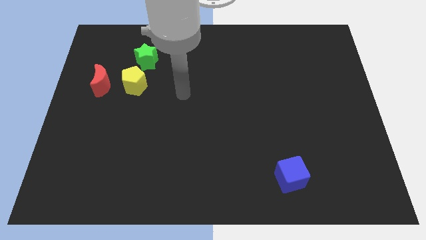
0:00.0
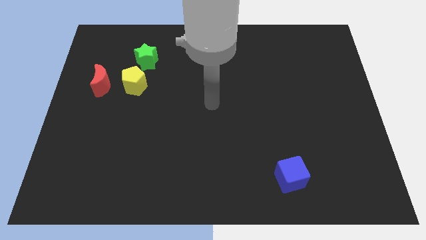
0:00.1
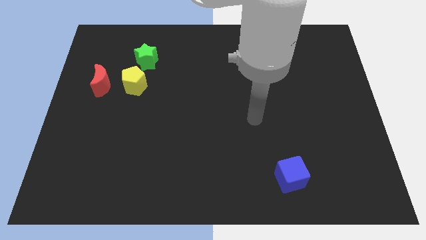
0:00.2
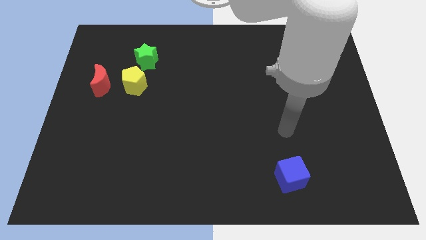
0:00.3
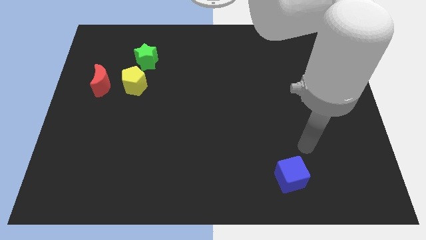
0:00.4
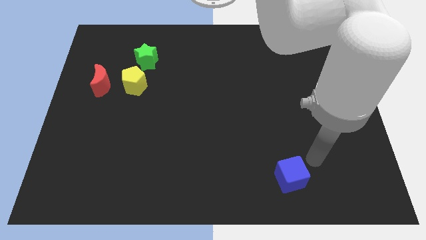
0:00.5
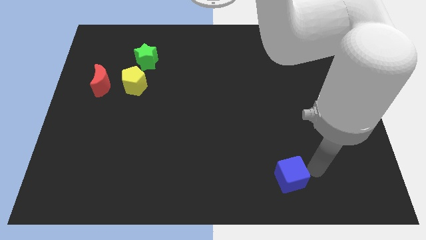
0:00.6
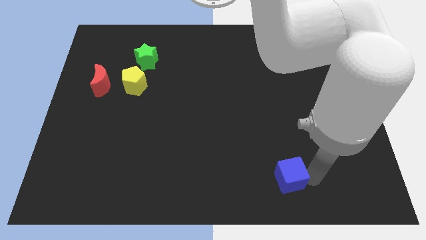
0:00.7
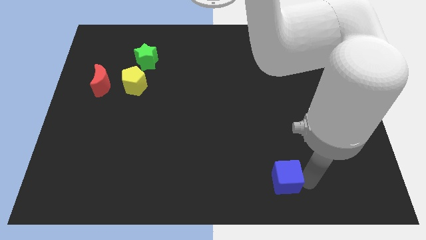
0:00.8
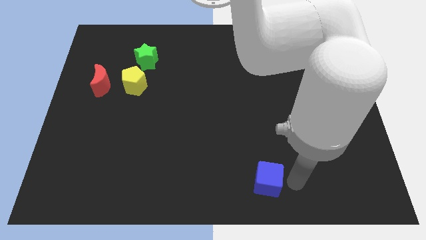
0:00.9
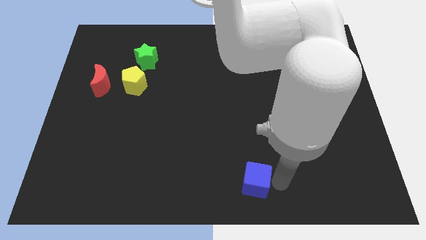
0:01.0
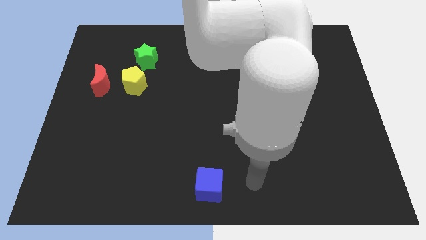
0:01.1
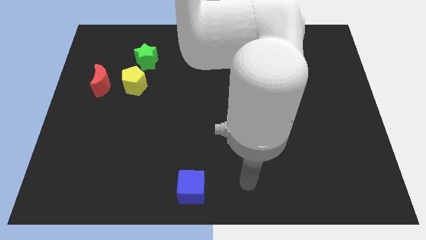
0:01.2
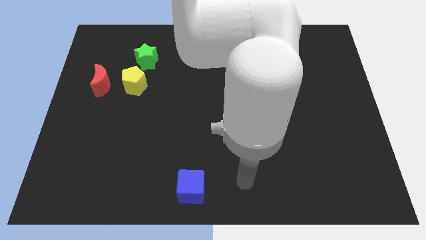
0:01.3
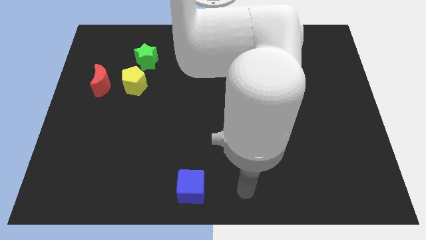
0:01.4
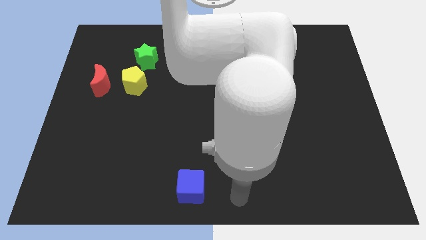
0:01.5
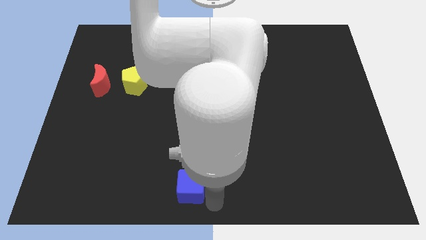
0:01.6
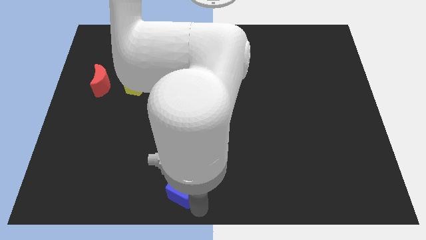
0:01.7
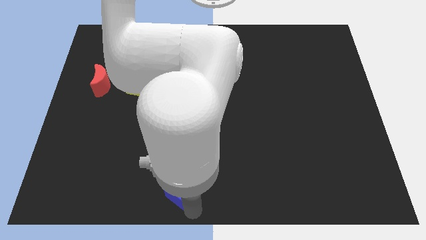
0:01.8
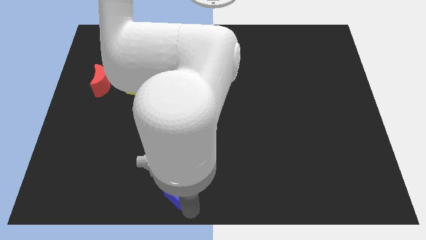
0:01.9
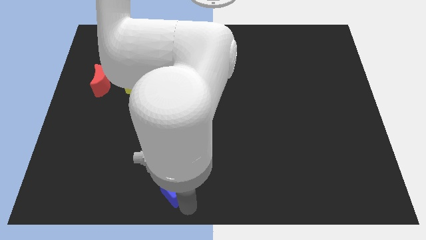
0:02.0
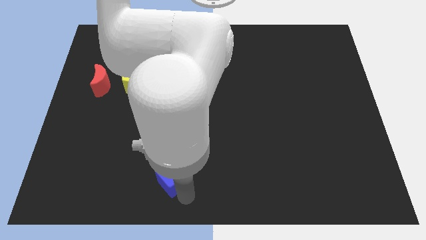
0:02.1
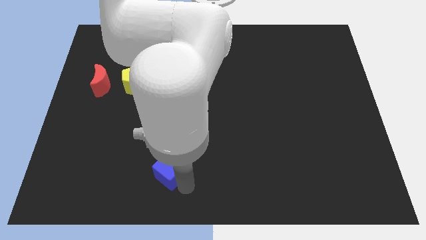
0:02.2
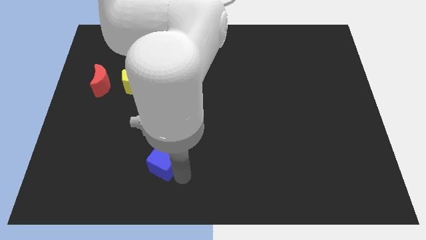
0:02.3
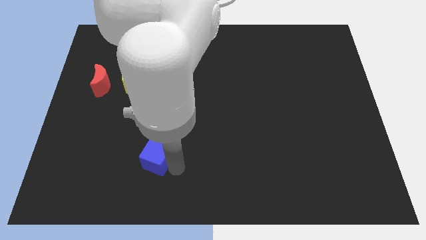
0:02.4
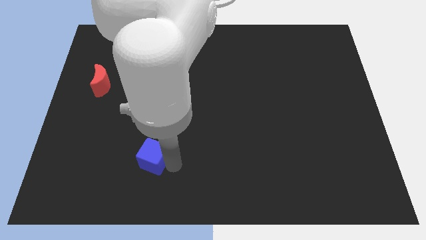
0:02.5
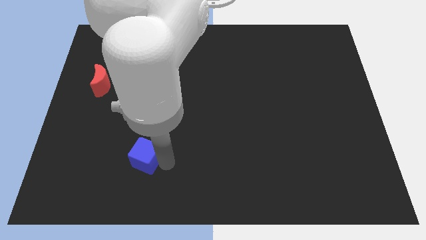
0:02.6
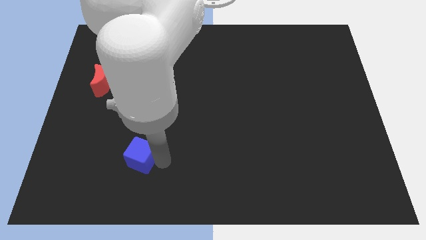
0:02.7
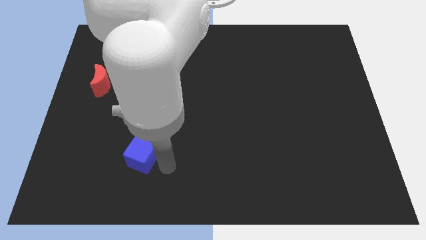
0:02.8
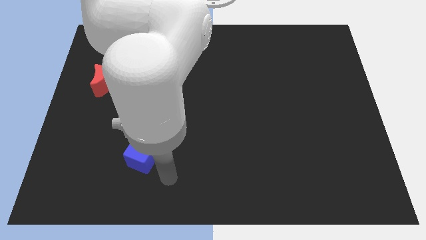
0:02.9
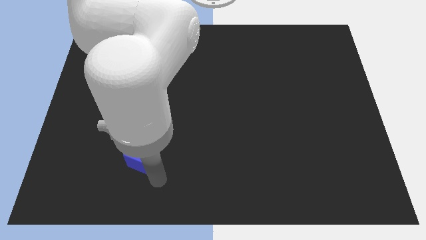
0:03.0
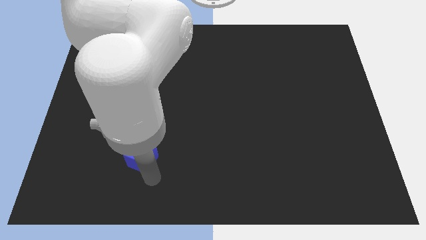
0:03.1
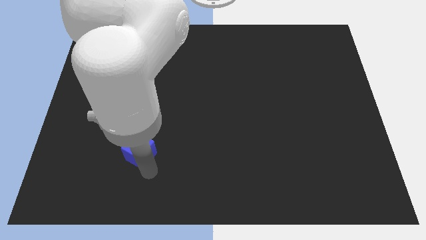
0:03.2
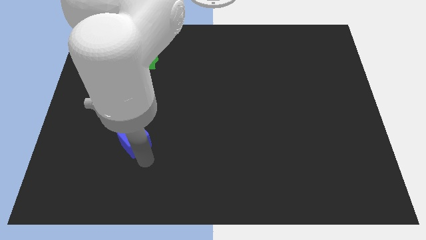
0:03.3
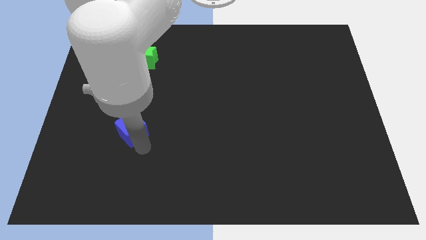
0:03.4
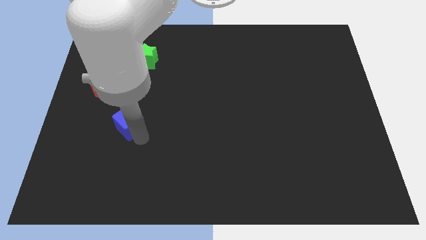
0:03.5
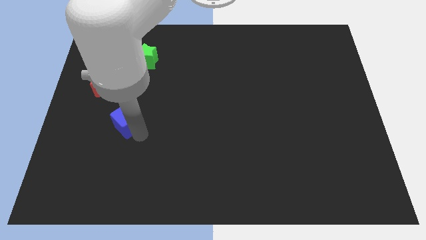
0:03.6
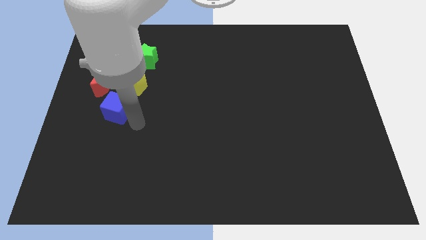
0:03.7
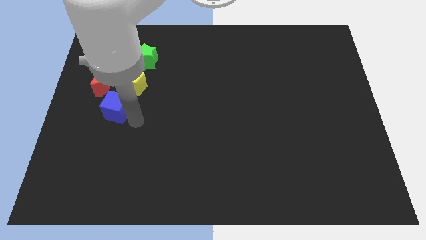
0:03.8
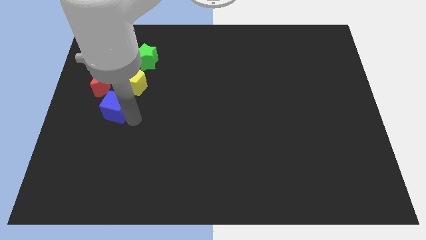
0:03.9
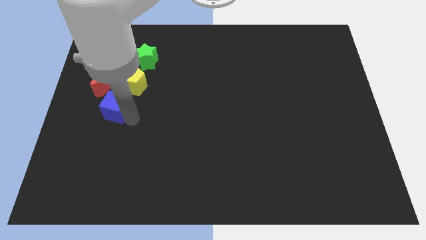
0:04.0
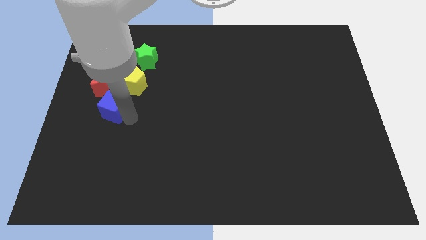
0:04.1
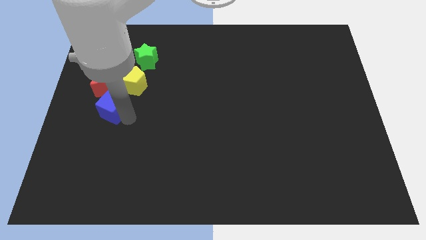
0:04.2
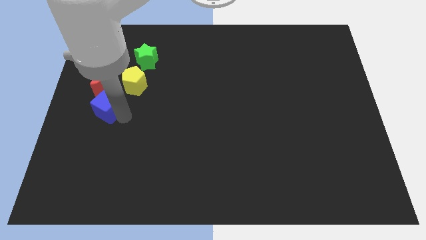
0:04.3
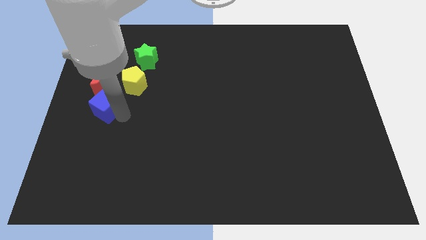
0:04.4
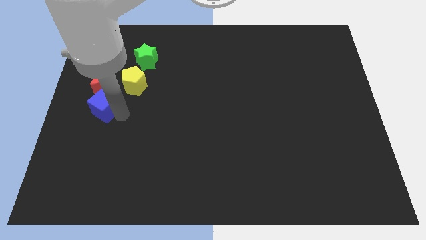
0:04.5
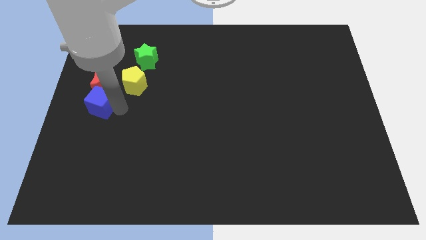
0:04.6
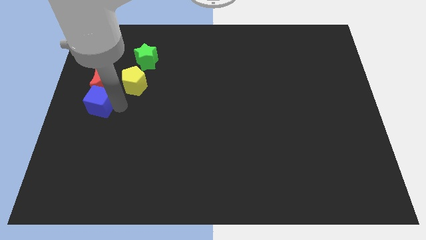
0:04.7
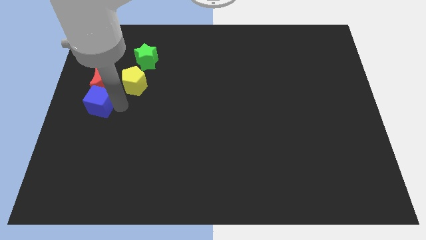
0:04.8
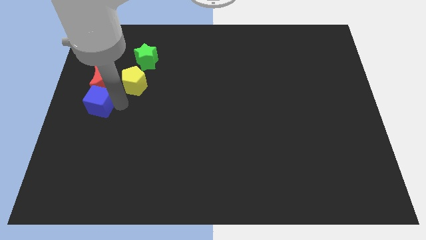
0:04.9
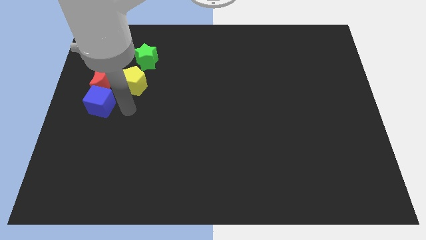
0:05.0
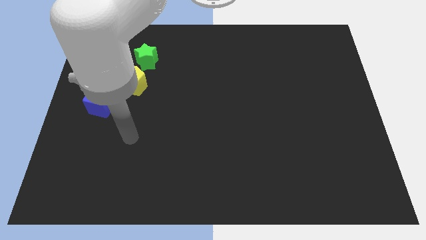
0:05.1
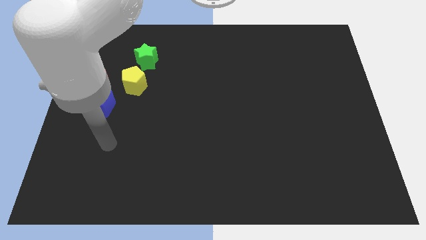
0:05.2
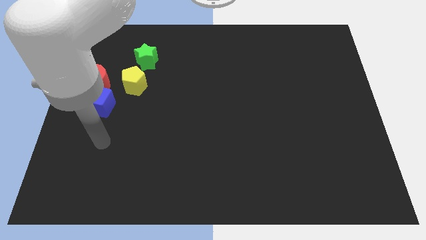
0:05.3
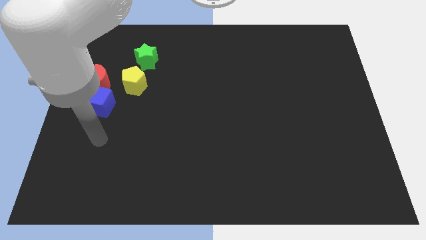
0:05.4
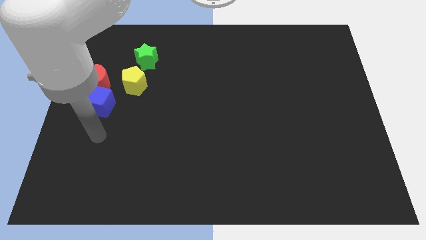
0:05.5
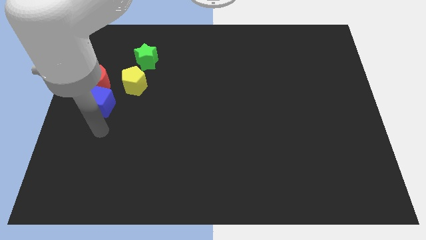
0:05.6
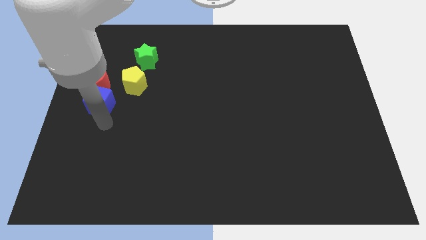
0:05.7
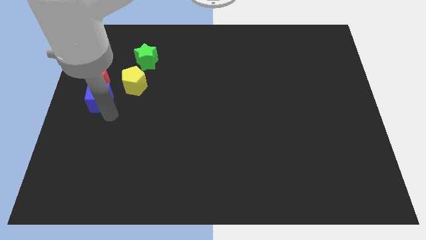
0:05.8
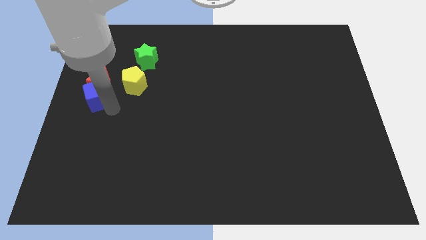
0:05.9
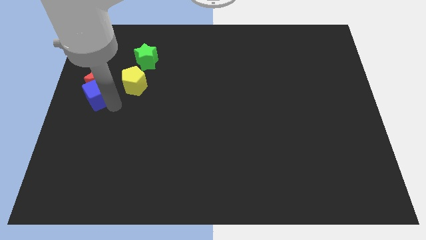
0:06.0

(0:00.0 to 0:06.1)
slide the blue cube to the red block

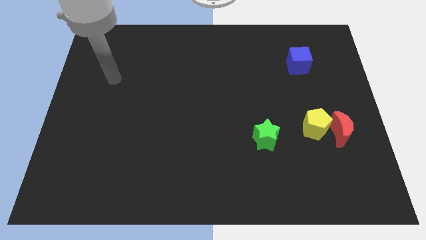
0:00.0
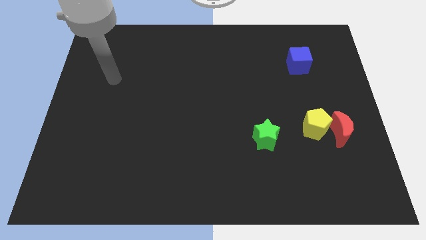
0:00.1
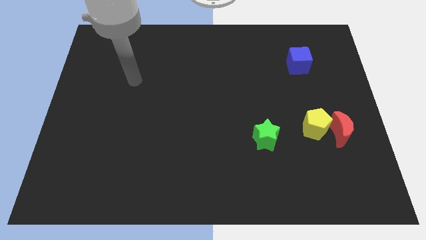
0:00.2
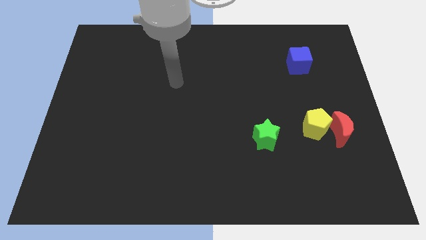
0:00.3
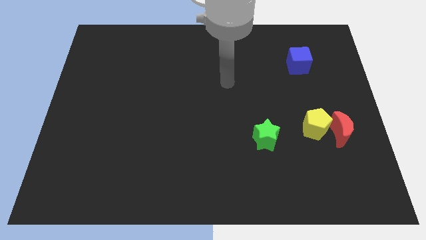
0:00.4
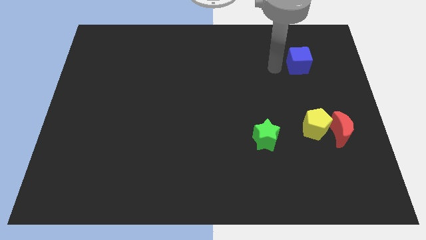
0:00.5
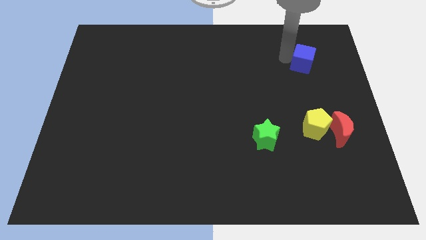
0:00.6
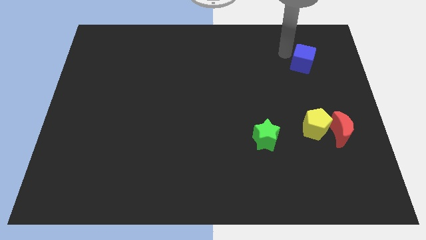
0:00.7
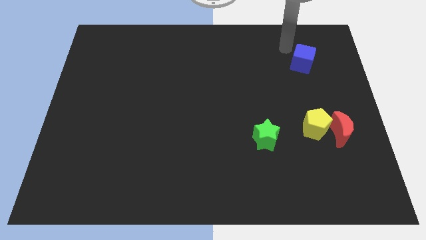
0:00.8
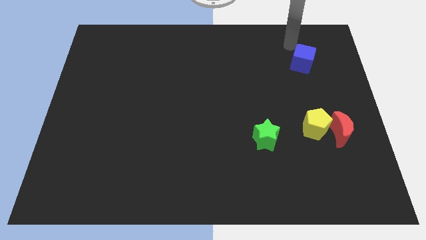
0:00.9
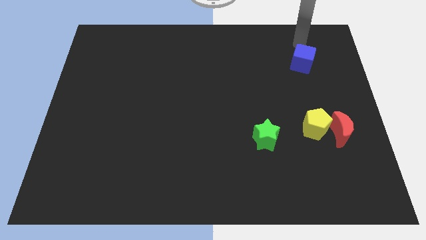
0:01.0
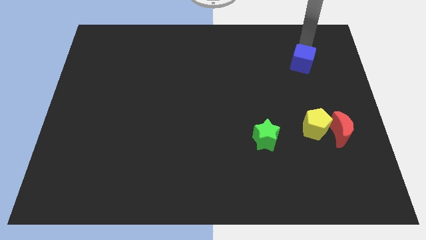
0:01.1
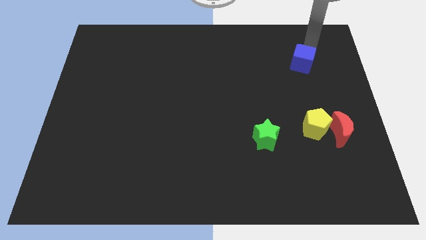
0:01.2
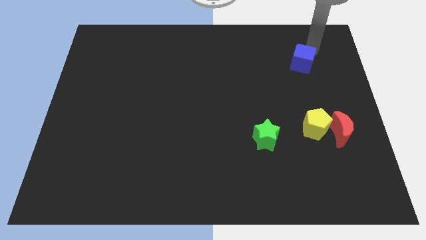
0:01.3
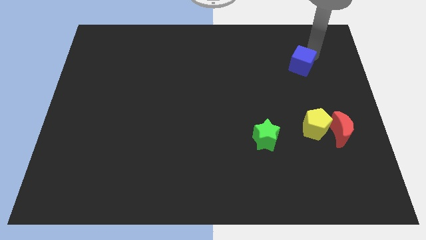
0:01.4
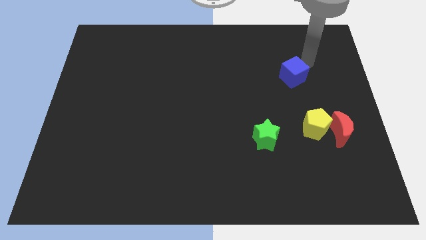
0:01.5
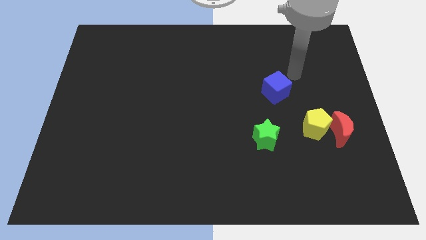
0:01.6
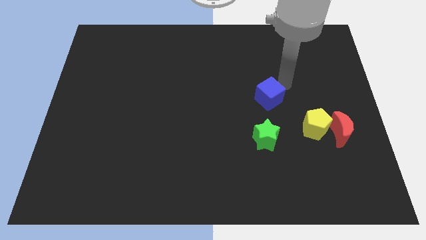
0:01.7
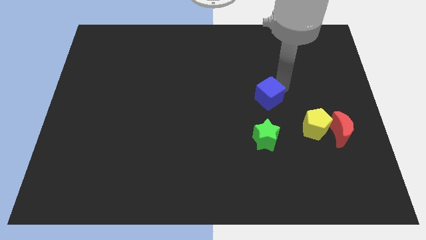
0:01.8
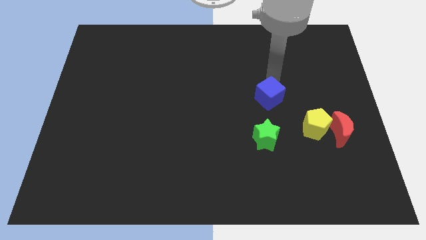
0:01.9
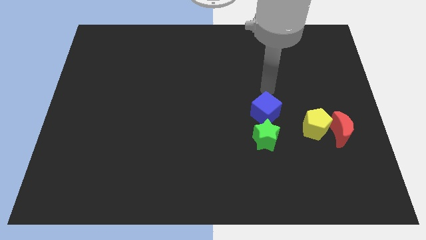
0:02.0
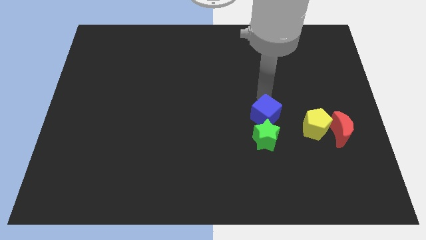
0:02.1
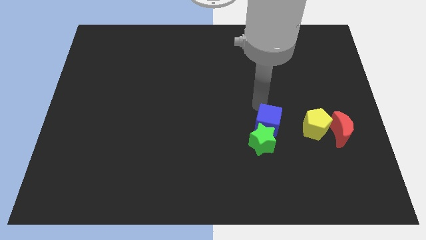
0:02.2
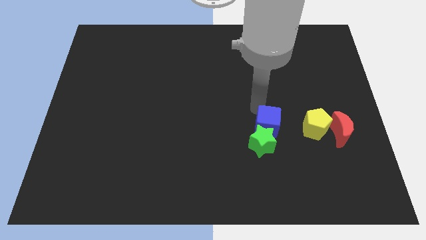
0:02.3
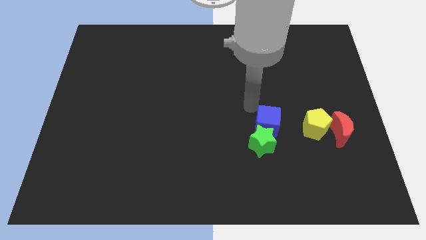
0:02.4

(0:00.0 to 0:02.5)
slide the blue cube to the green block
